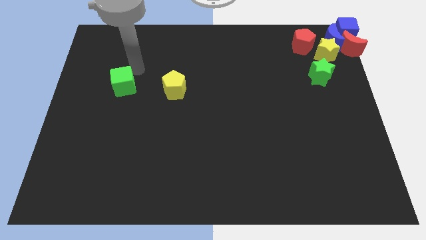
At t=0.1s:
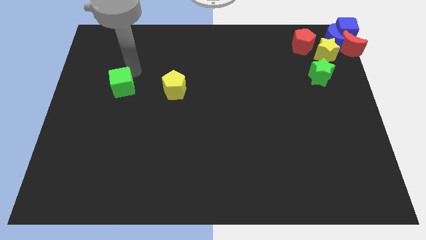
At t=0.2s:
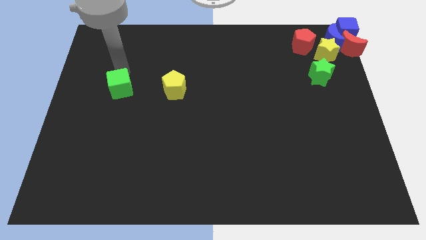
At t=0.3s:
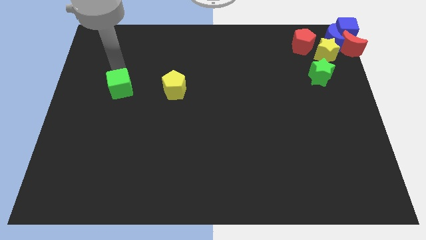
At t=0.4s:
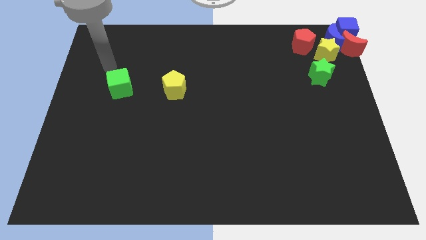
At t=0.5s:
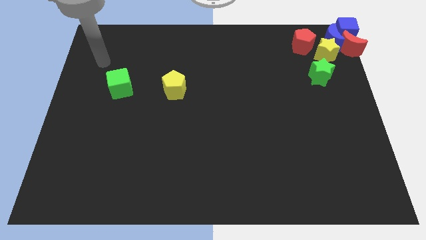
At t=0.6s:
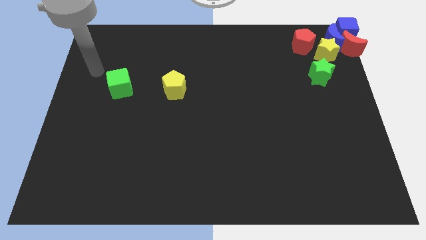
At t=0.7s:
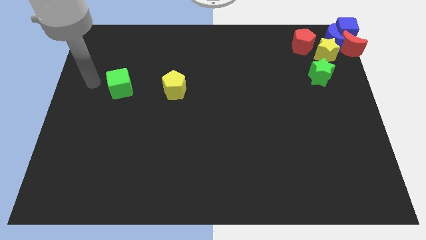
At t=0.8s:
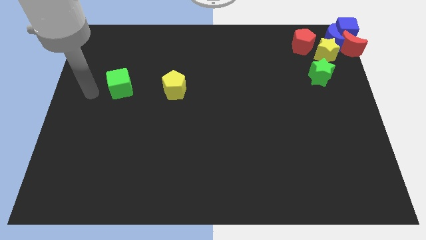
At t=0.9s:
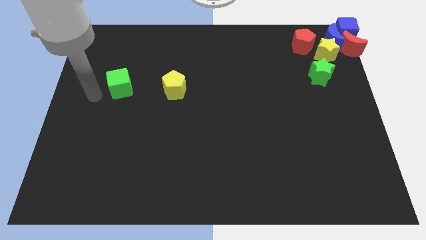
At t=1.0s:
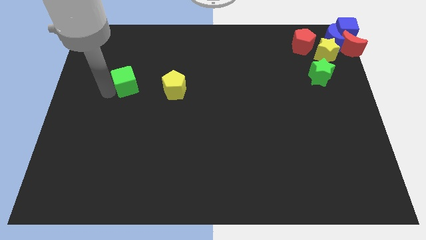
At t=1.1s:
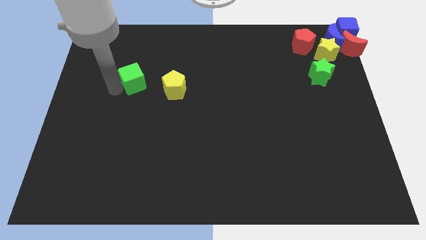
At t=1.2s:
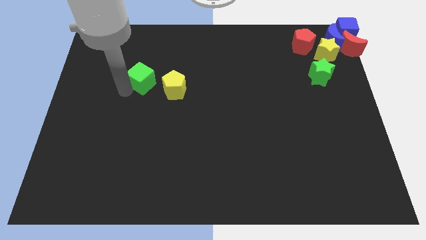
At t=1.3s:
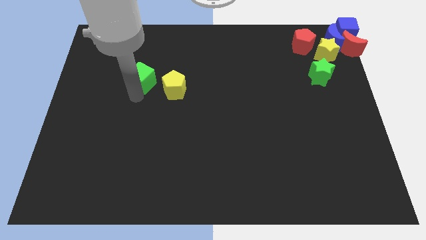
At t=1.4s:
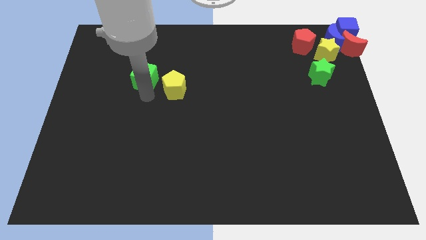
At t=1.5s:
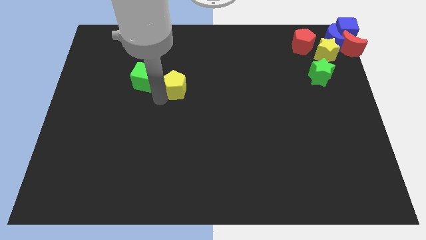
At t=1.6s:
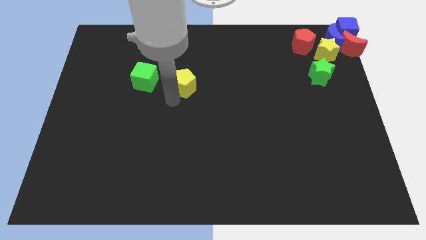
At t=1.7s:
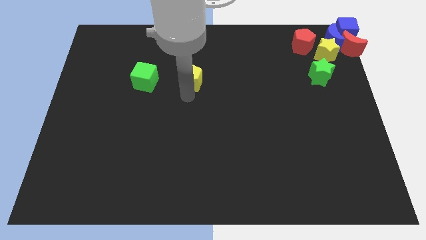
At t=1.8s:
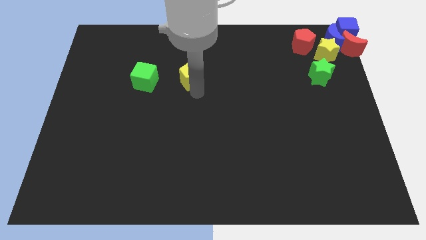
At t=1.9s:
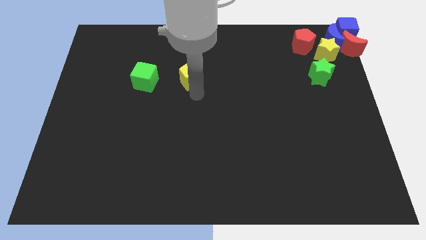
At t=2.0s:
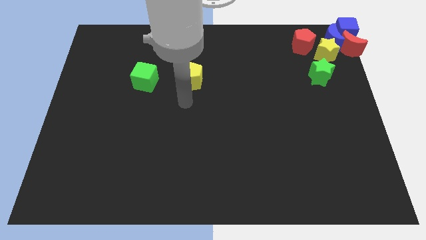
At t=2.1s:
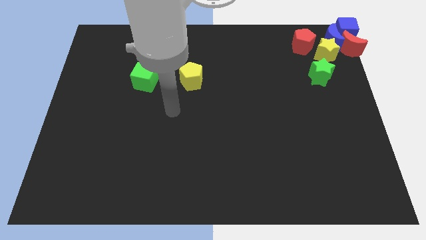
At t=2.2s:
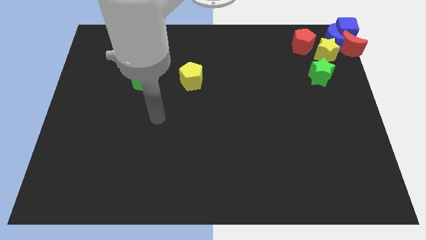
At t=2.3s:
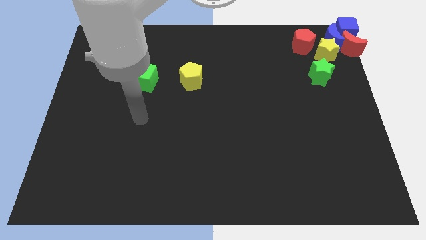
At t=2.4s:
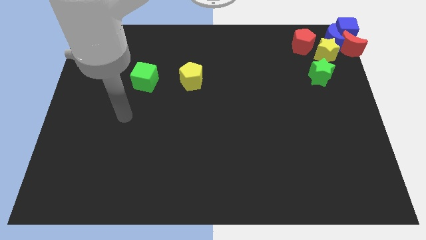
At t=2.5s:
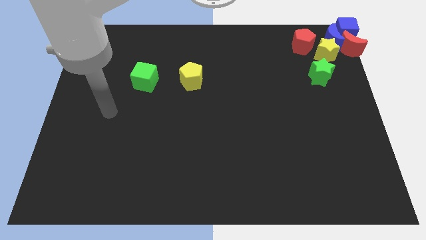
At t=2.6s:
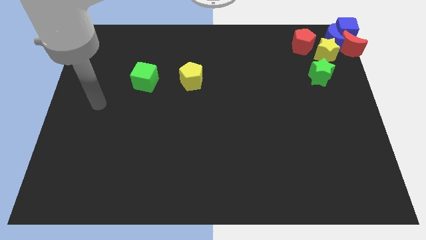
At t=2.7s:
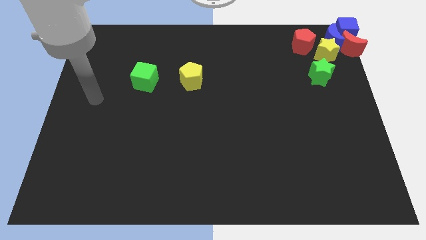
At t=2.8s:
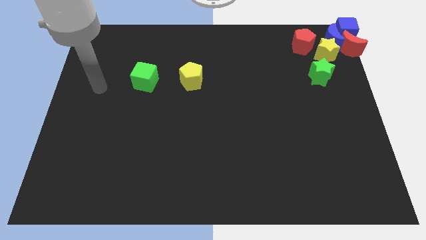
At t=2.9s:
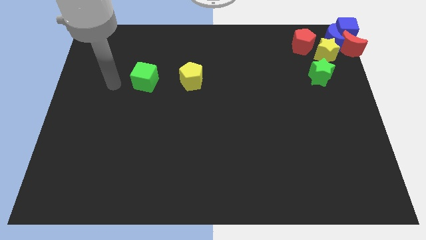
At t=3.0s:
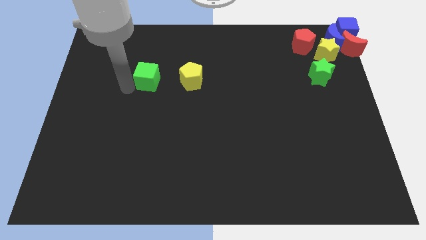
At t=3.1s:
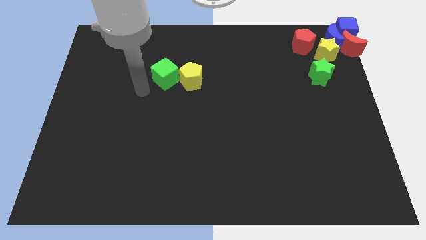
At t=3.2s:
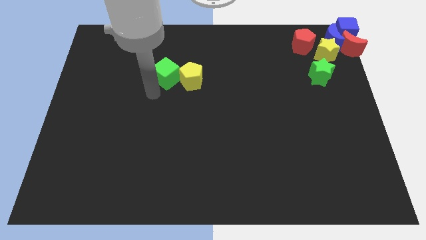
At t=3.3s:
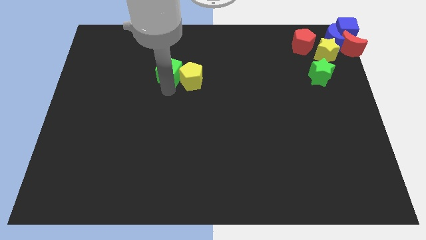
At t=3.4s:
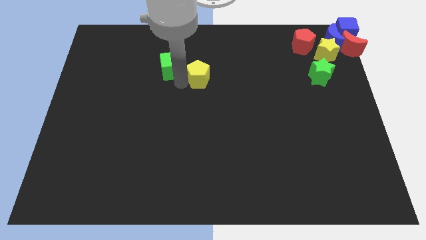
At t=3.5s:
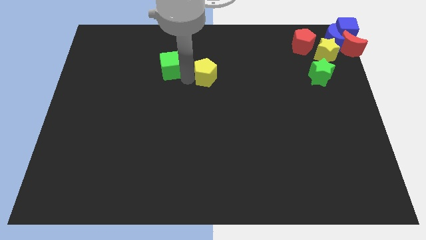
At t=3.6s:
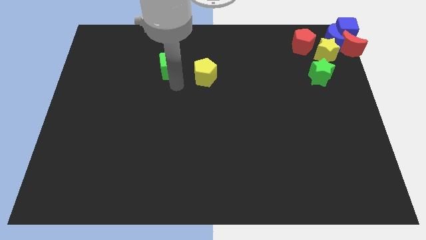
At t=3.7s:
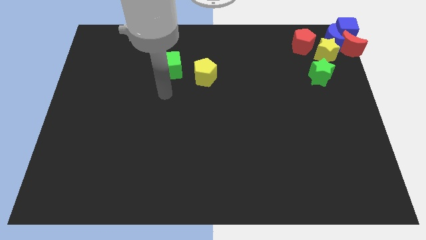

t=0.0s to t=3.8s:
move the yellow pentagon and the green cube slightly to the right

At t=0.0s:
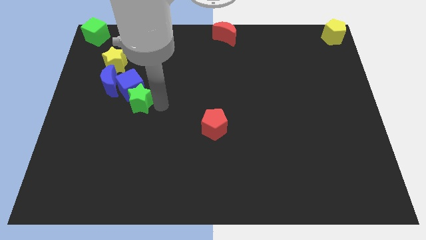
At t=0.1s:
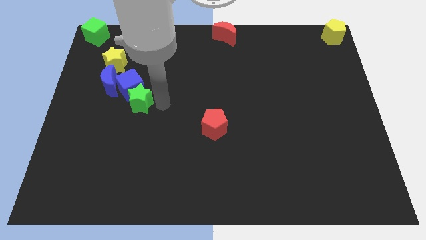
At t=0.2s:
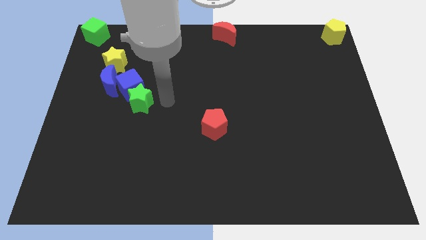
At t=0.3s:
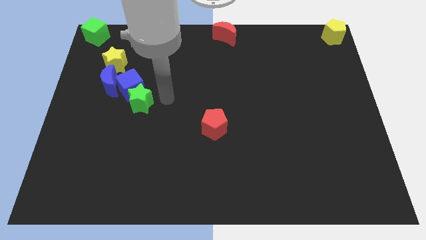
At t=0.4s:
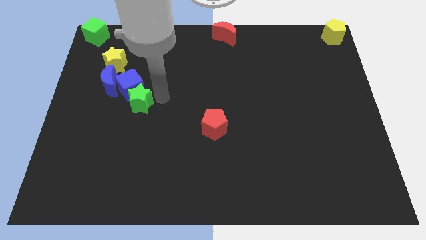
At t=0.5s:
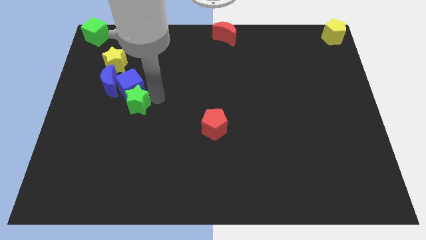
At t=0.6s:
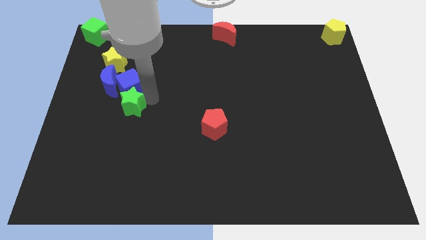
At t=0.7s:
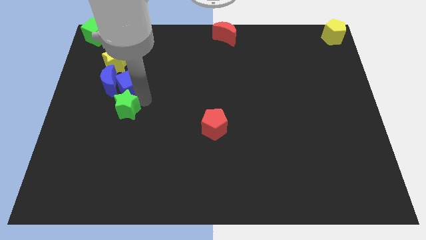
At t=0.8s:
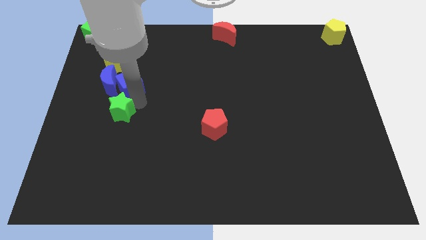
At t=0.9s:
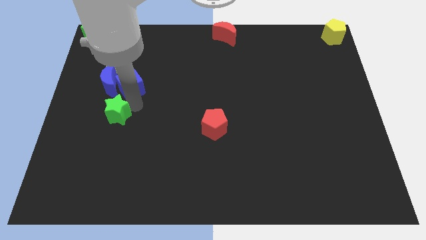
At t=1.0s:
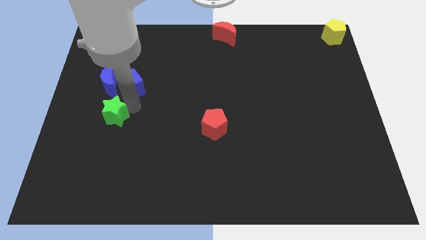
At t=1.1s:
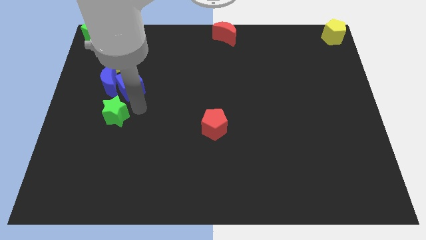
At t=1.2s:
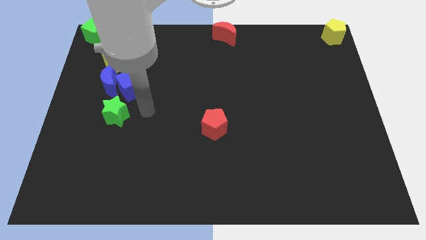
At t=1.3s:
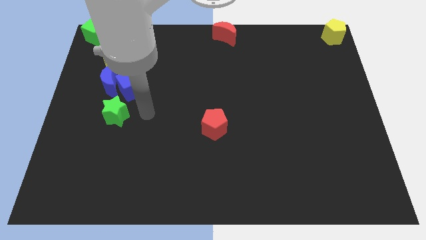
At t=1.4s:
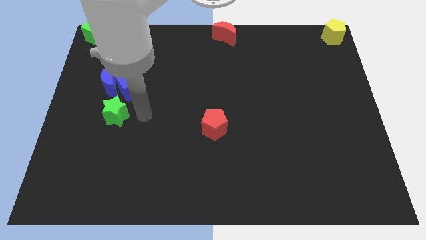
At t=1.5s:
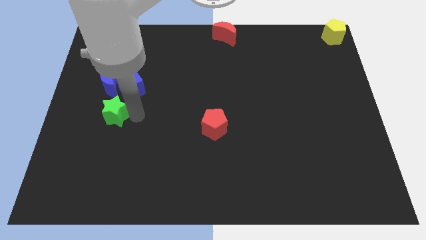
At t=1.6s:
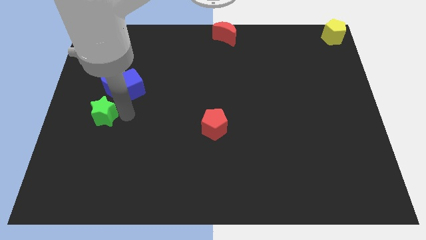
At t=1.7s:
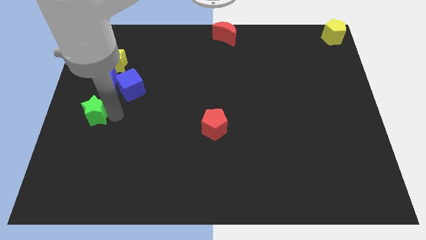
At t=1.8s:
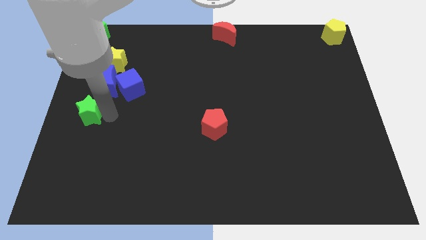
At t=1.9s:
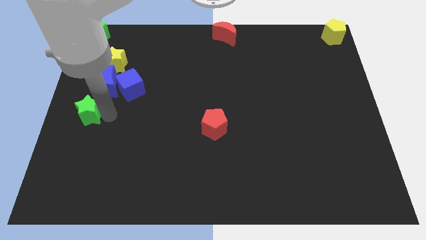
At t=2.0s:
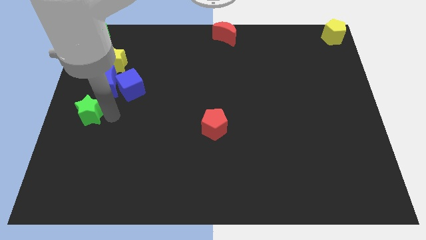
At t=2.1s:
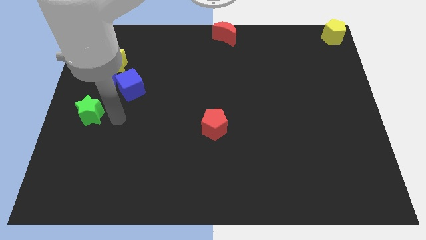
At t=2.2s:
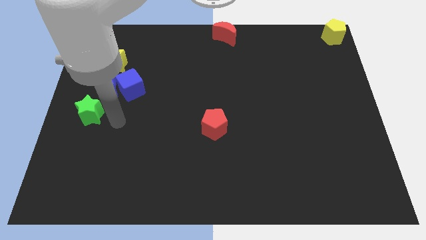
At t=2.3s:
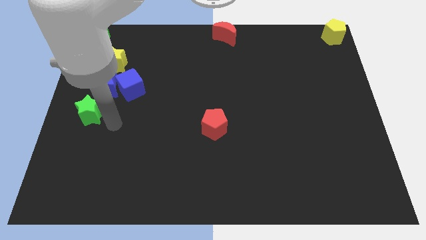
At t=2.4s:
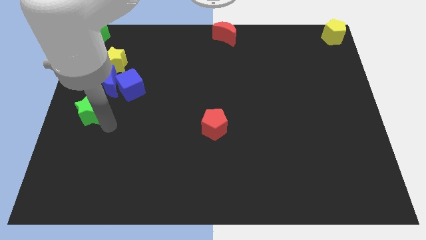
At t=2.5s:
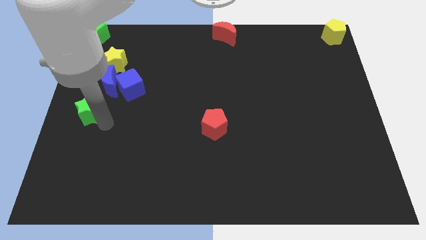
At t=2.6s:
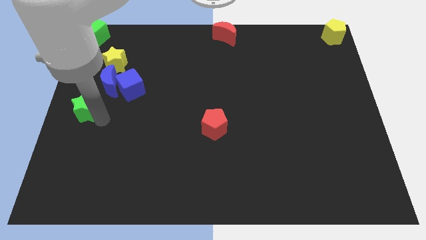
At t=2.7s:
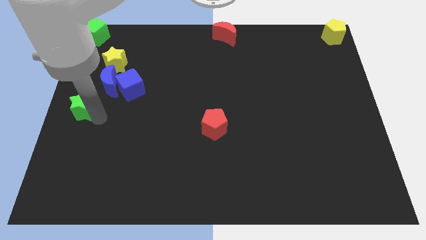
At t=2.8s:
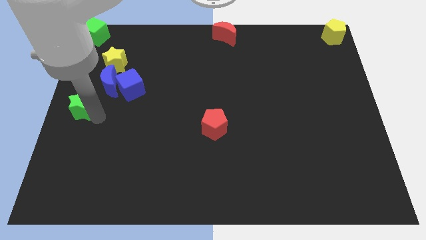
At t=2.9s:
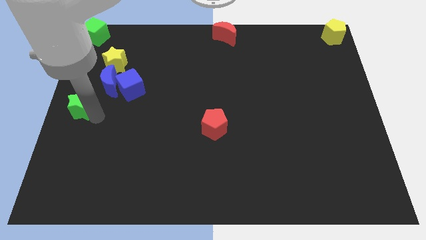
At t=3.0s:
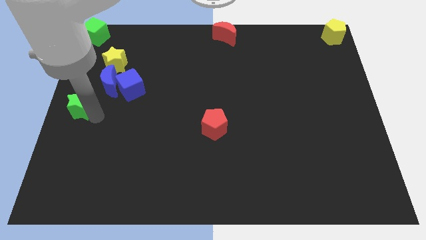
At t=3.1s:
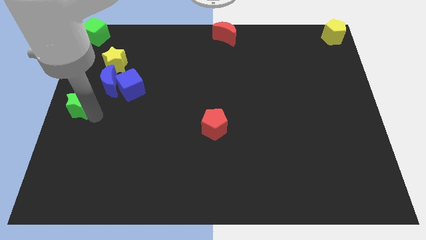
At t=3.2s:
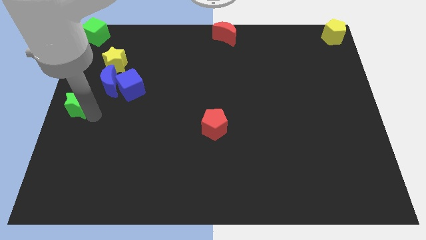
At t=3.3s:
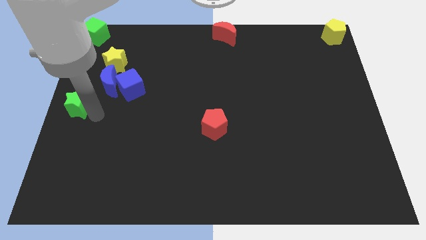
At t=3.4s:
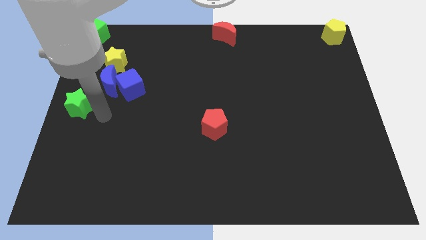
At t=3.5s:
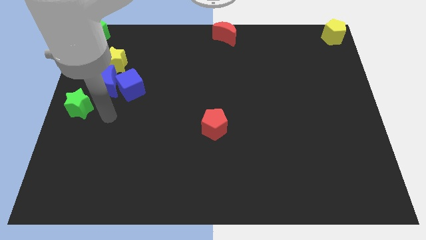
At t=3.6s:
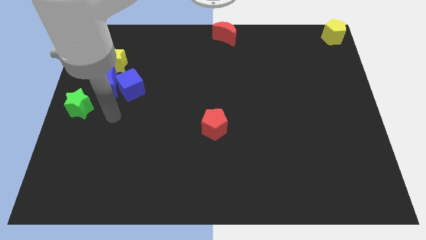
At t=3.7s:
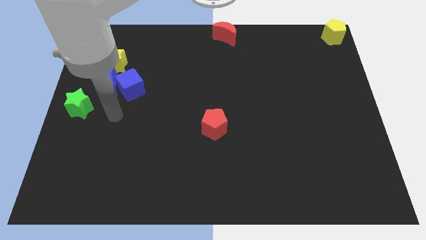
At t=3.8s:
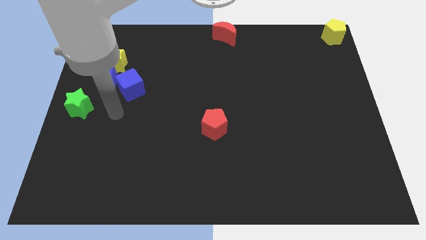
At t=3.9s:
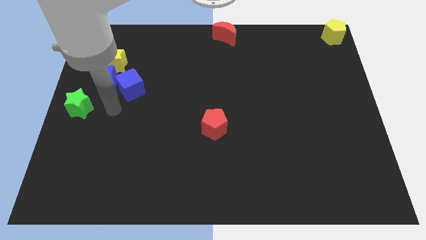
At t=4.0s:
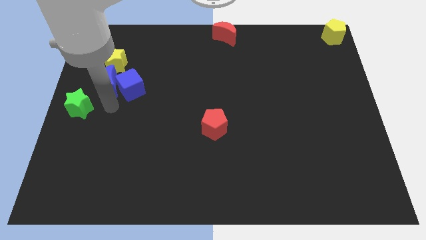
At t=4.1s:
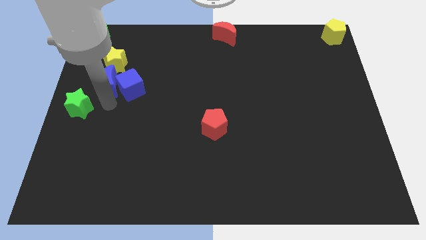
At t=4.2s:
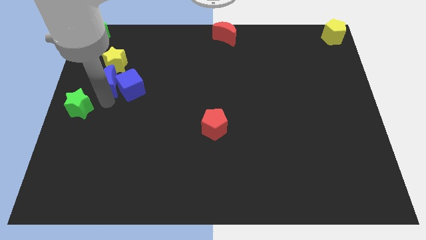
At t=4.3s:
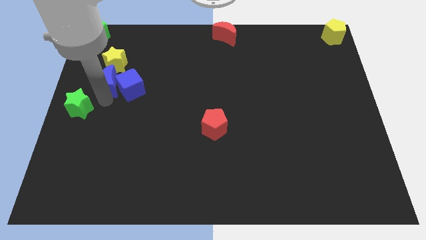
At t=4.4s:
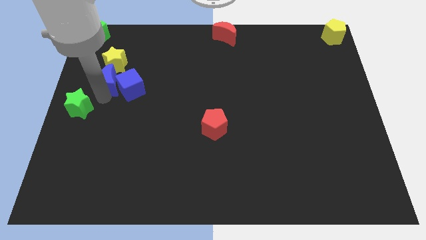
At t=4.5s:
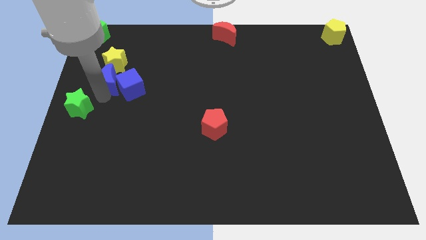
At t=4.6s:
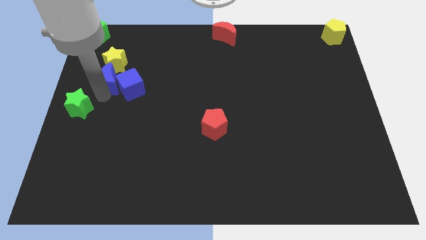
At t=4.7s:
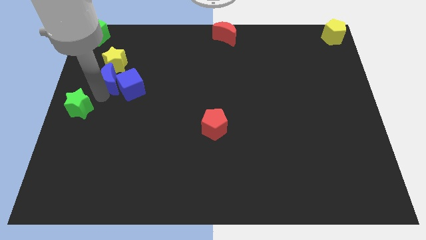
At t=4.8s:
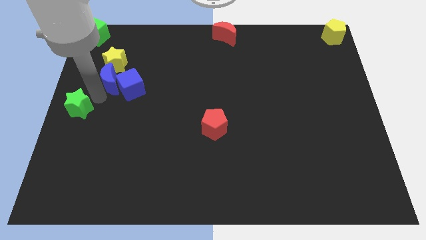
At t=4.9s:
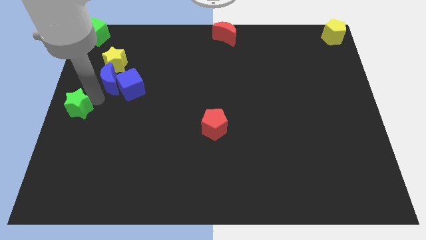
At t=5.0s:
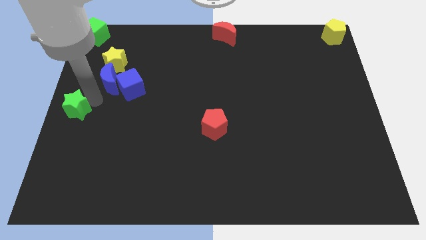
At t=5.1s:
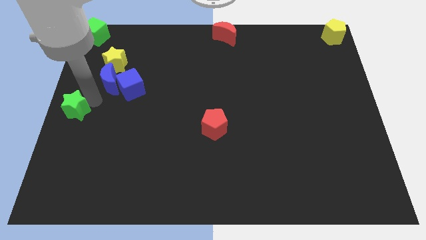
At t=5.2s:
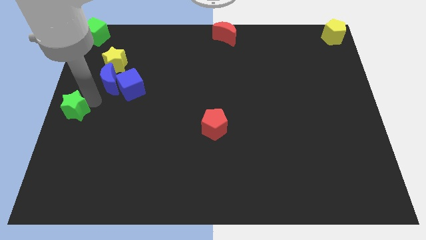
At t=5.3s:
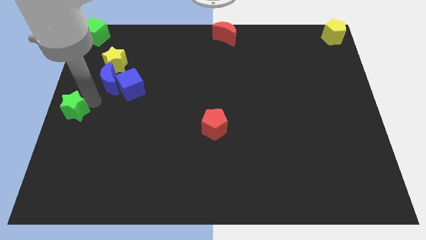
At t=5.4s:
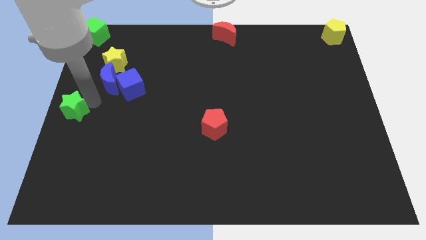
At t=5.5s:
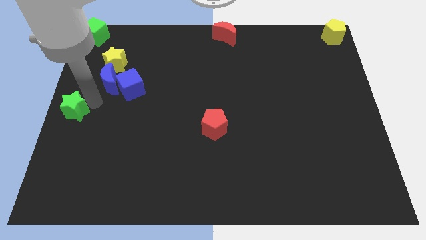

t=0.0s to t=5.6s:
move the green star at the center left side of the board
